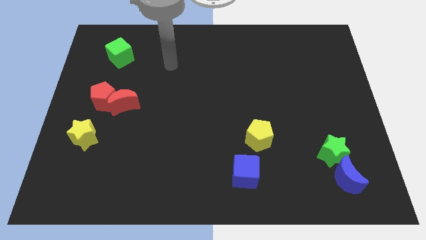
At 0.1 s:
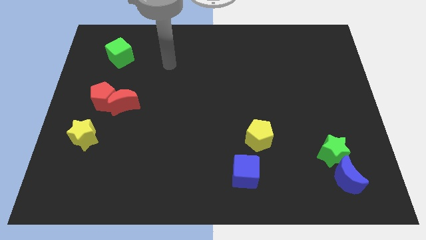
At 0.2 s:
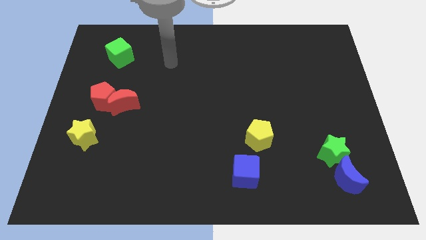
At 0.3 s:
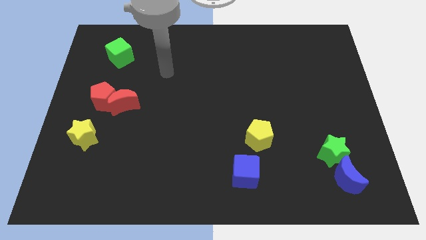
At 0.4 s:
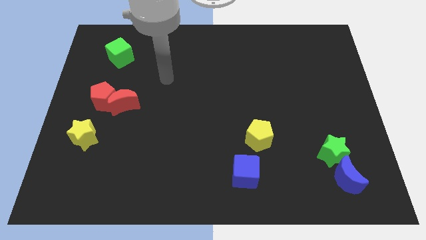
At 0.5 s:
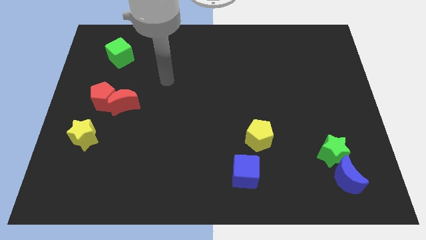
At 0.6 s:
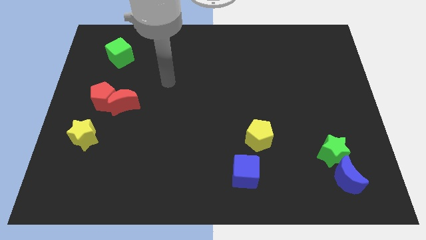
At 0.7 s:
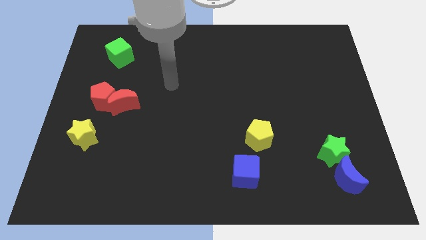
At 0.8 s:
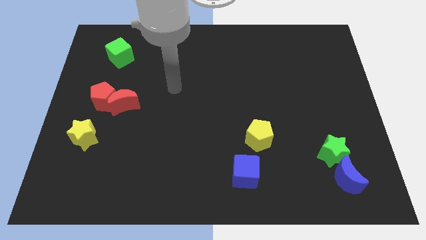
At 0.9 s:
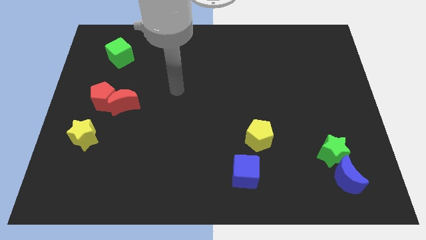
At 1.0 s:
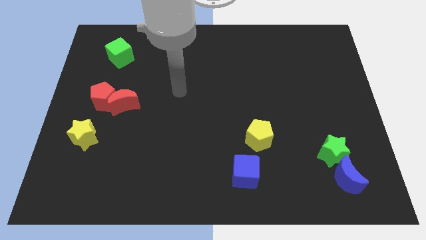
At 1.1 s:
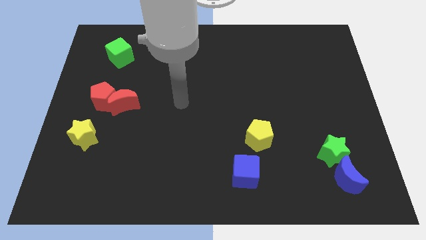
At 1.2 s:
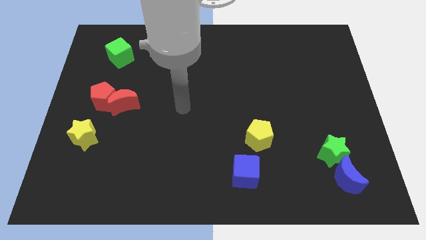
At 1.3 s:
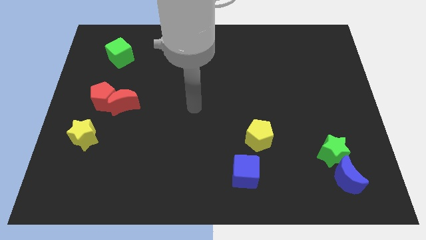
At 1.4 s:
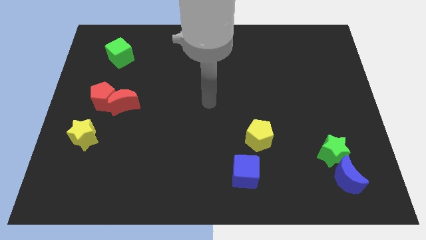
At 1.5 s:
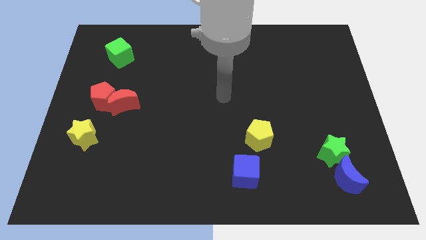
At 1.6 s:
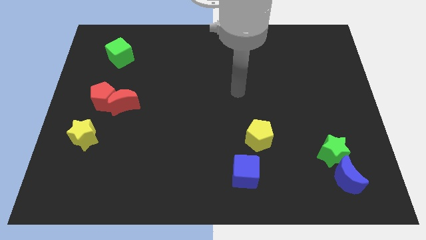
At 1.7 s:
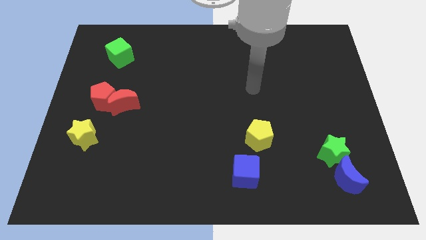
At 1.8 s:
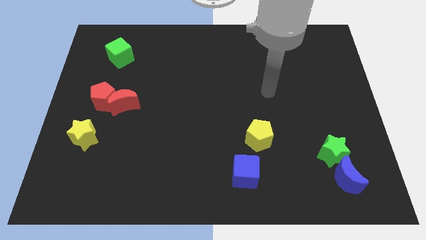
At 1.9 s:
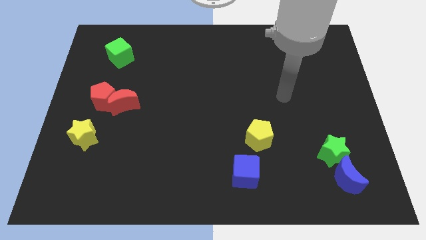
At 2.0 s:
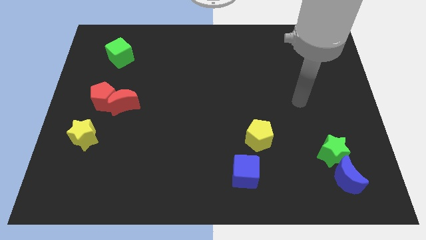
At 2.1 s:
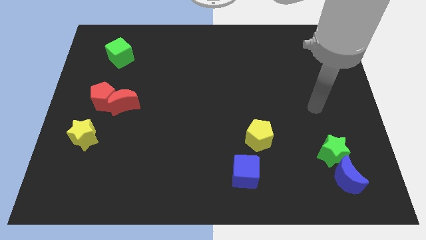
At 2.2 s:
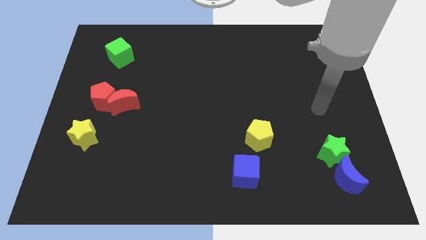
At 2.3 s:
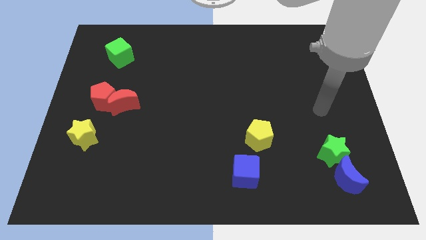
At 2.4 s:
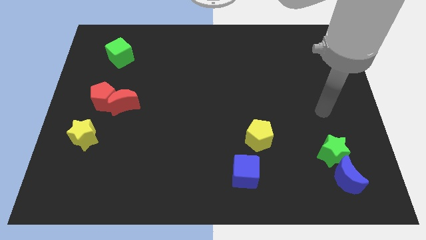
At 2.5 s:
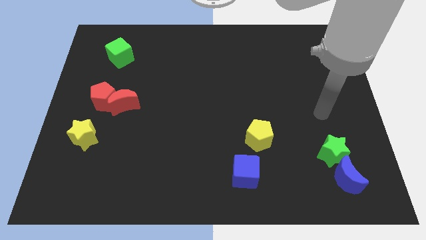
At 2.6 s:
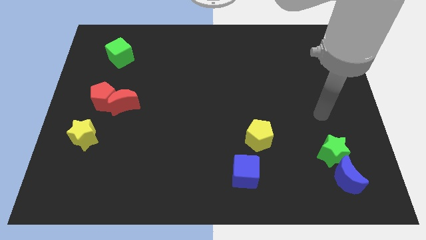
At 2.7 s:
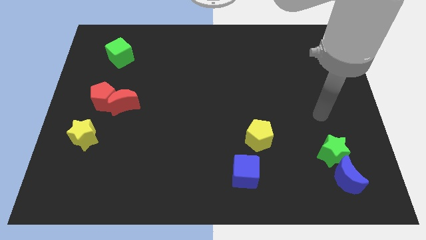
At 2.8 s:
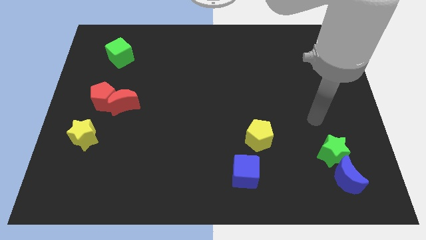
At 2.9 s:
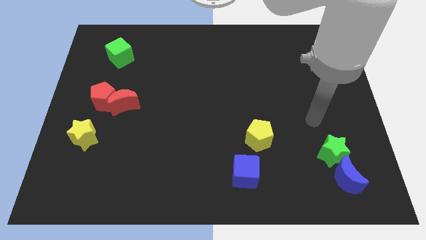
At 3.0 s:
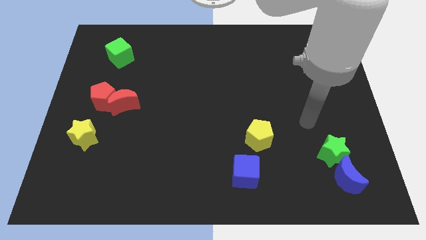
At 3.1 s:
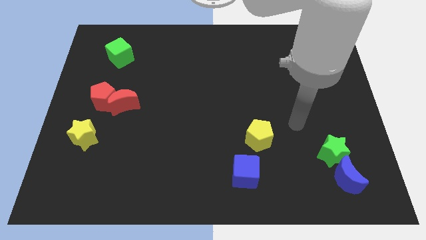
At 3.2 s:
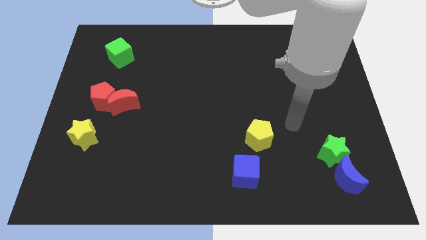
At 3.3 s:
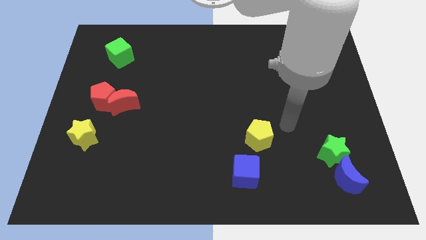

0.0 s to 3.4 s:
move your arm to the right of yellow pentagon

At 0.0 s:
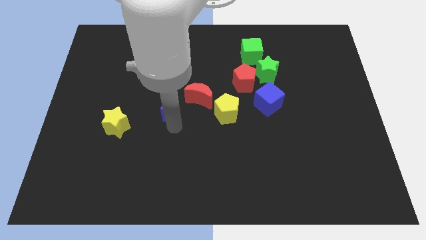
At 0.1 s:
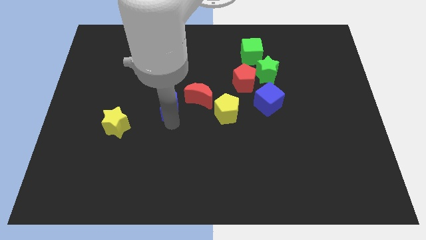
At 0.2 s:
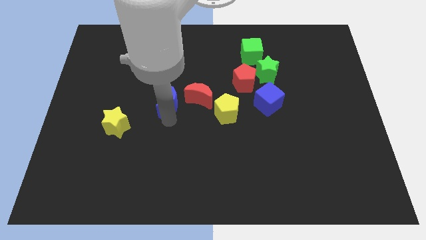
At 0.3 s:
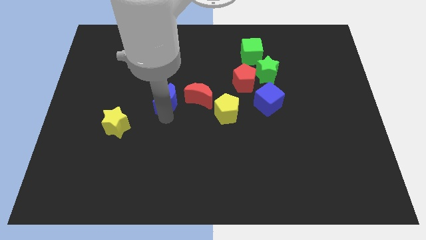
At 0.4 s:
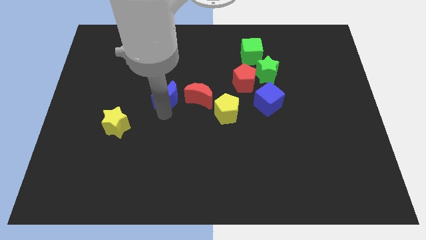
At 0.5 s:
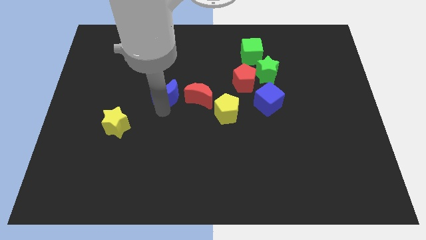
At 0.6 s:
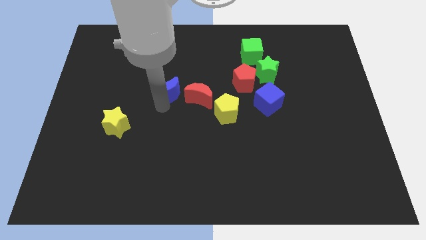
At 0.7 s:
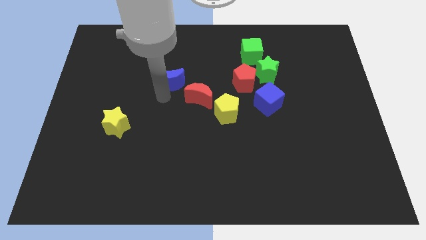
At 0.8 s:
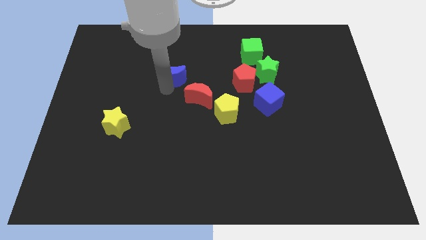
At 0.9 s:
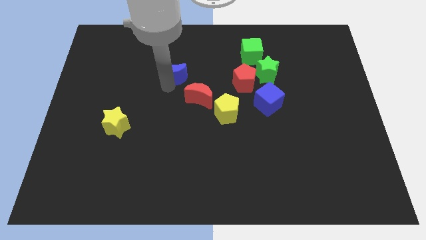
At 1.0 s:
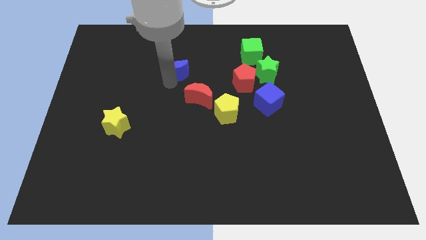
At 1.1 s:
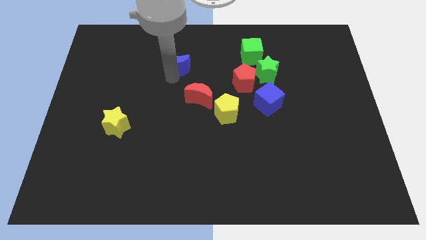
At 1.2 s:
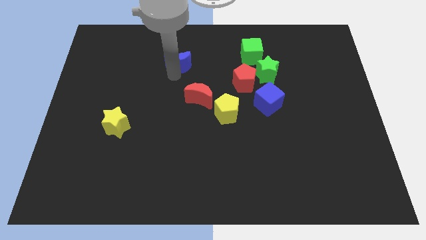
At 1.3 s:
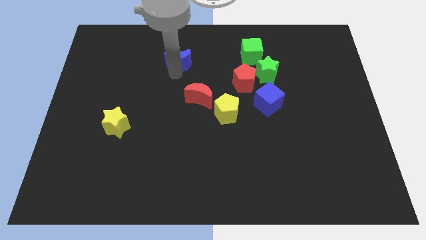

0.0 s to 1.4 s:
move the blue moon above the red moon

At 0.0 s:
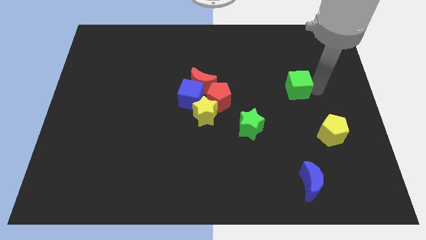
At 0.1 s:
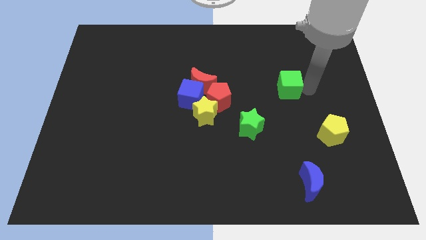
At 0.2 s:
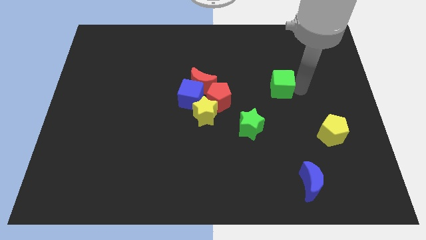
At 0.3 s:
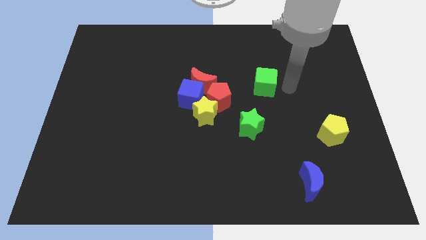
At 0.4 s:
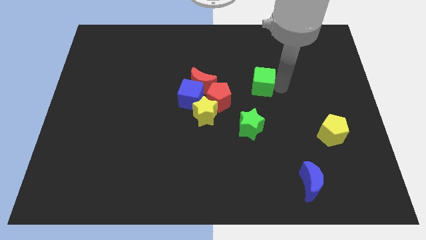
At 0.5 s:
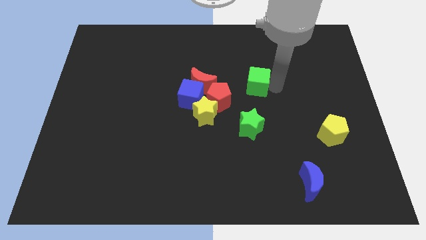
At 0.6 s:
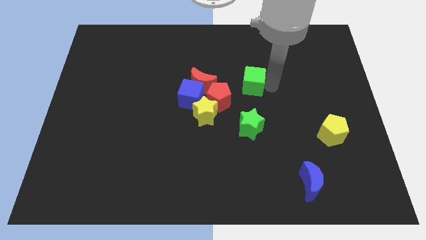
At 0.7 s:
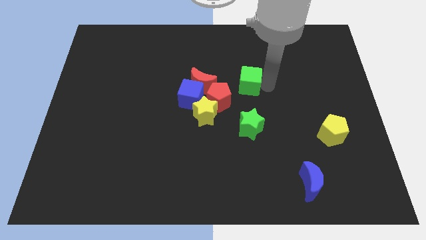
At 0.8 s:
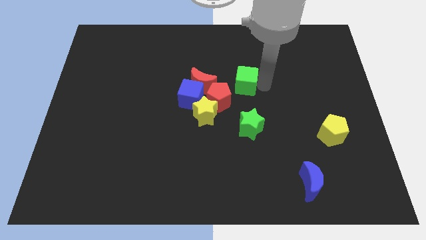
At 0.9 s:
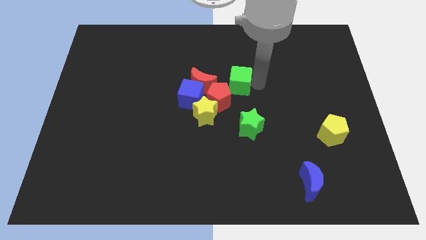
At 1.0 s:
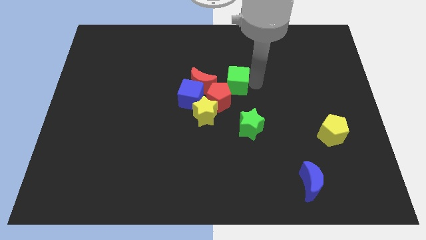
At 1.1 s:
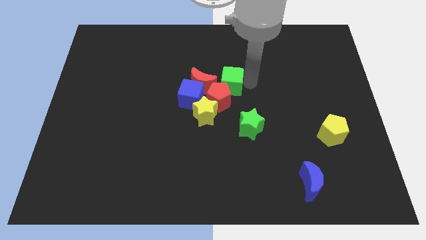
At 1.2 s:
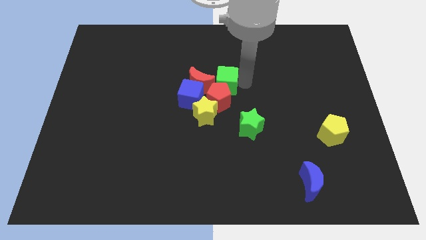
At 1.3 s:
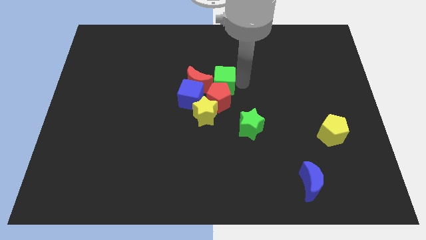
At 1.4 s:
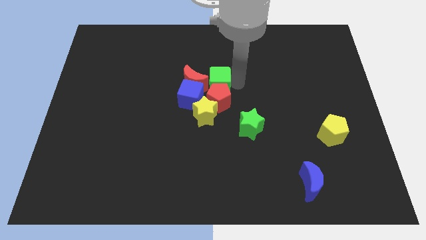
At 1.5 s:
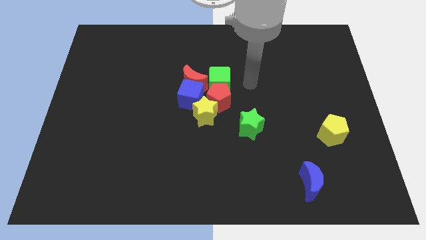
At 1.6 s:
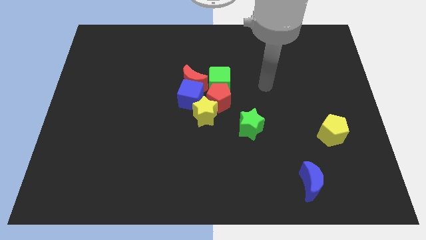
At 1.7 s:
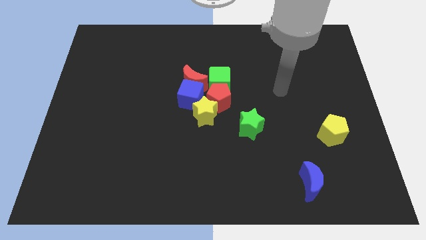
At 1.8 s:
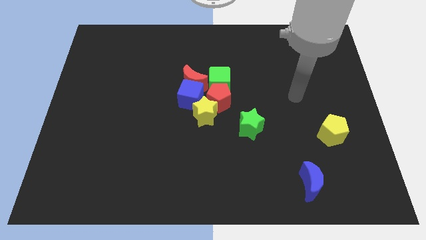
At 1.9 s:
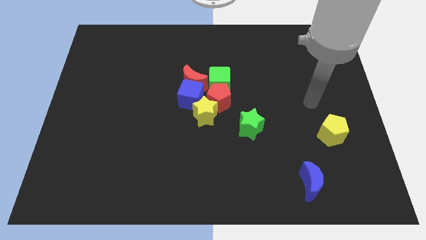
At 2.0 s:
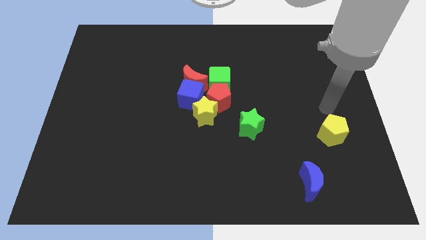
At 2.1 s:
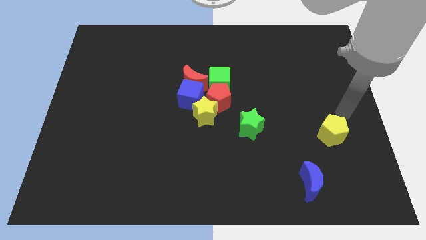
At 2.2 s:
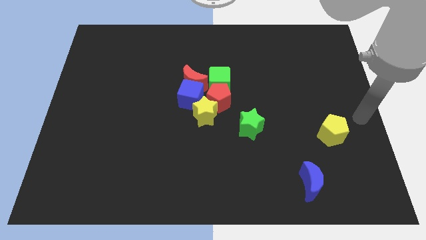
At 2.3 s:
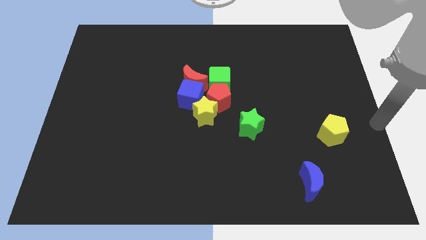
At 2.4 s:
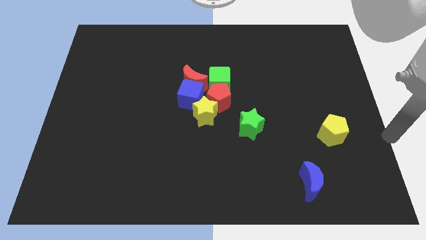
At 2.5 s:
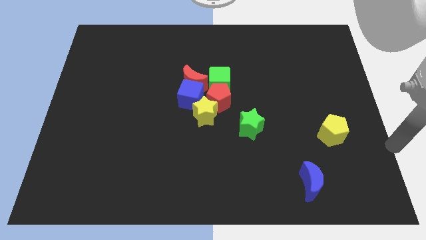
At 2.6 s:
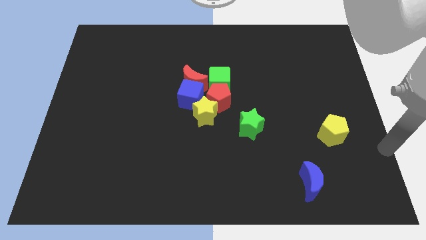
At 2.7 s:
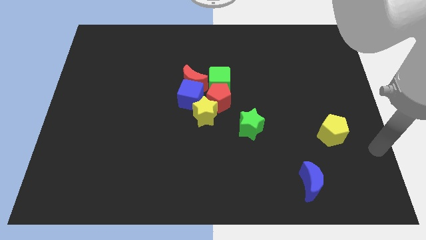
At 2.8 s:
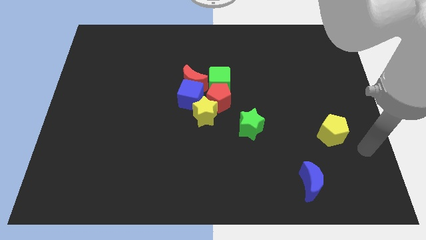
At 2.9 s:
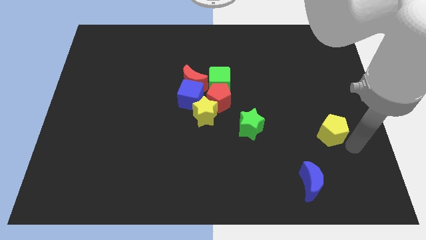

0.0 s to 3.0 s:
place the arm near the yellow pentagon

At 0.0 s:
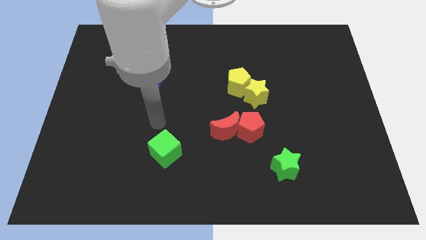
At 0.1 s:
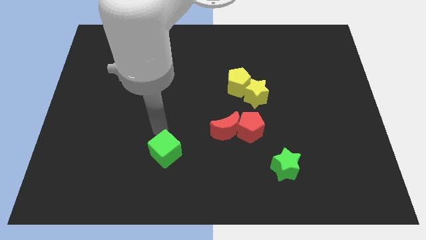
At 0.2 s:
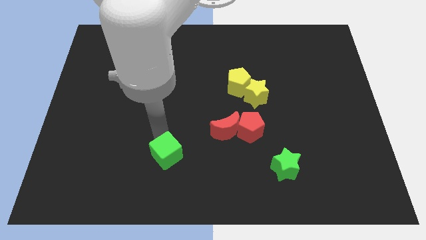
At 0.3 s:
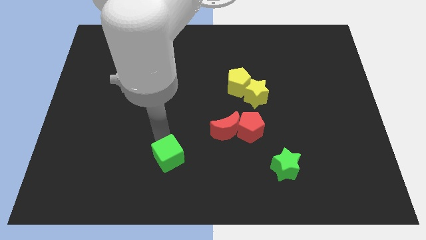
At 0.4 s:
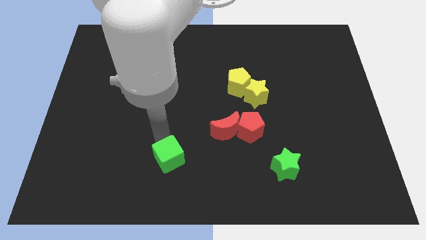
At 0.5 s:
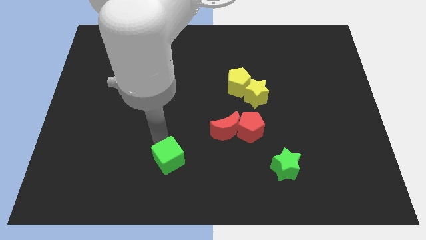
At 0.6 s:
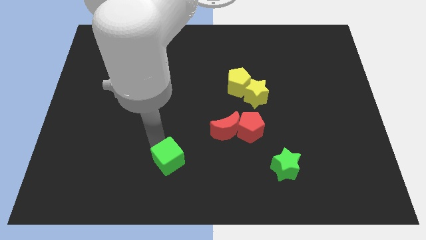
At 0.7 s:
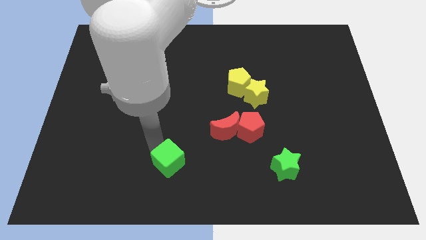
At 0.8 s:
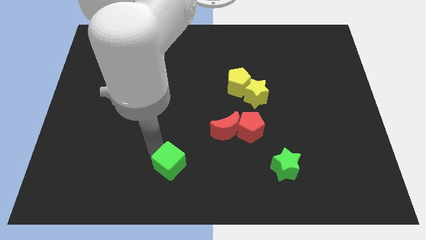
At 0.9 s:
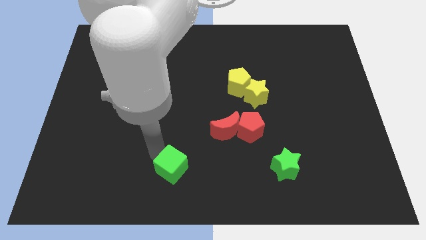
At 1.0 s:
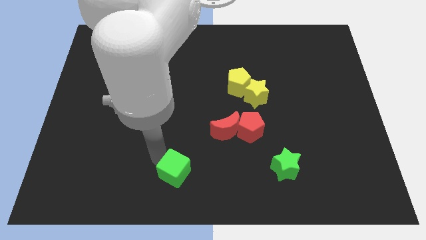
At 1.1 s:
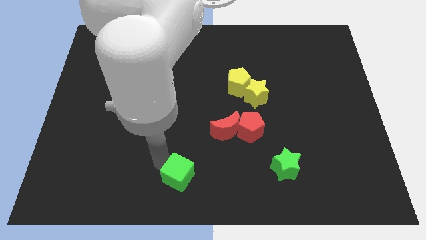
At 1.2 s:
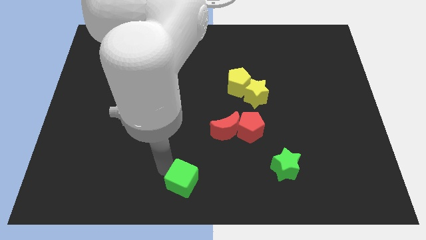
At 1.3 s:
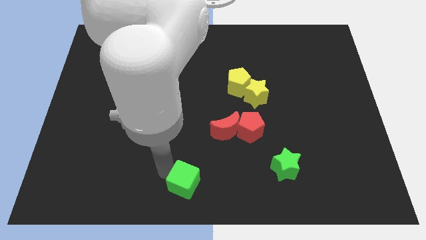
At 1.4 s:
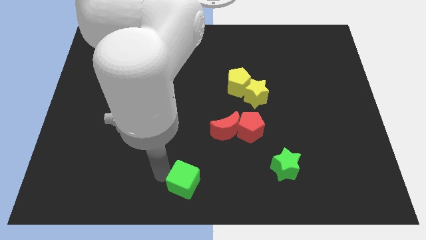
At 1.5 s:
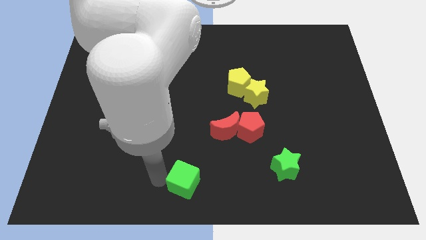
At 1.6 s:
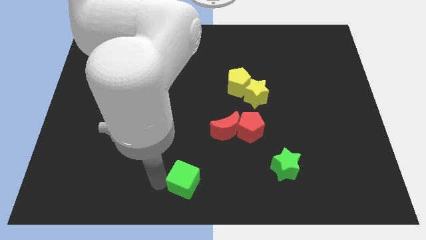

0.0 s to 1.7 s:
push the green cube towards the bottom centre of the board
